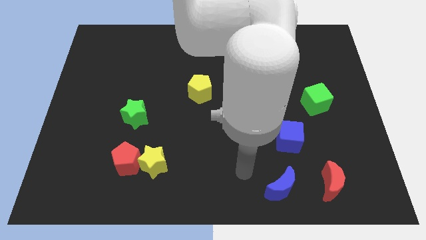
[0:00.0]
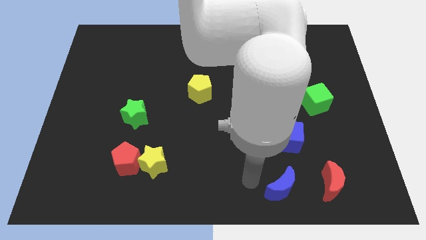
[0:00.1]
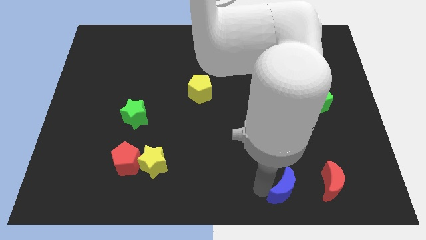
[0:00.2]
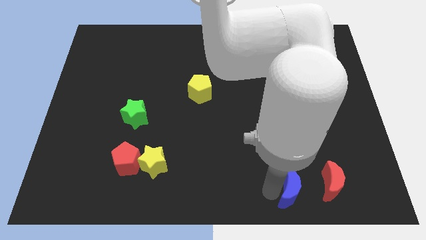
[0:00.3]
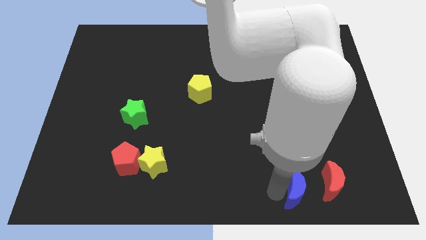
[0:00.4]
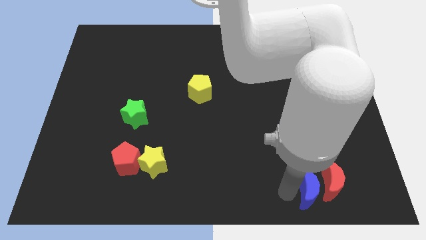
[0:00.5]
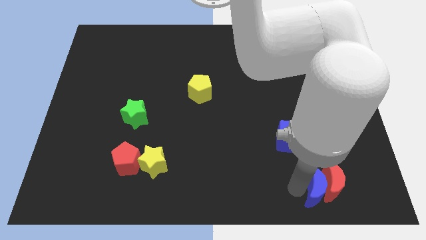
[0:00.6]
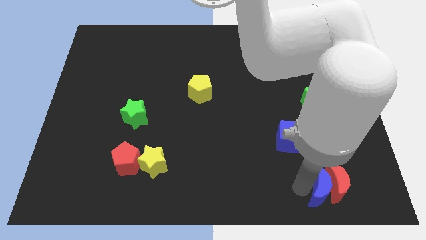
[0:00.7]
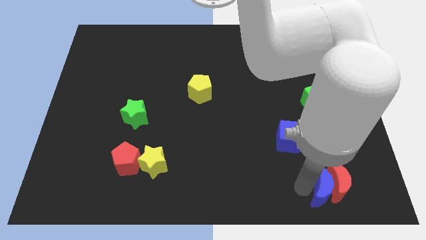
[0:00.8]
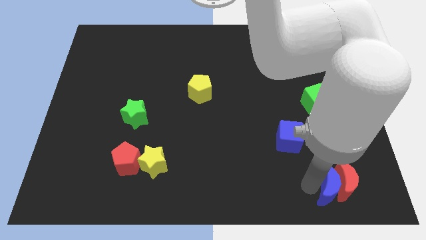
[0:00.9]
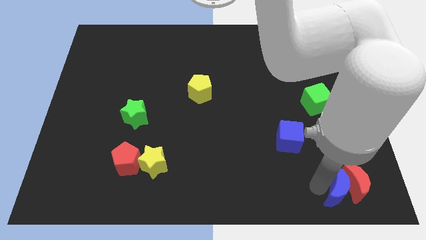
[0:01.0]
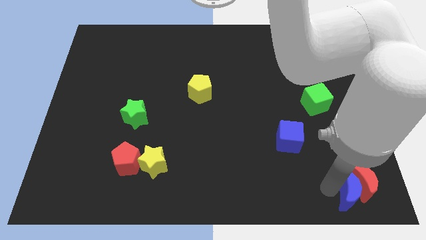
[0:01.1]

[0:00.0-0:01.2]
push the blue moon into the red moon

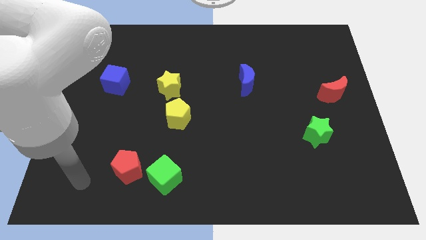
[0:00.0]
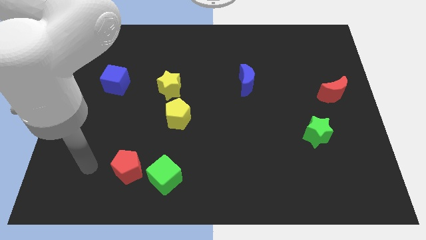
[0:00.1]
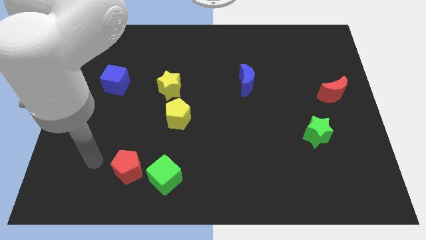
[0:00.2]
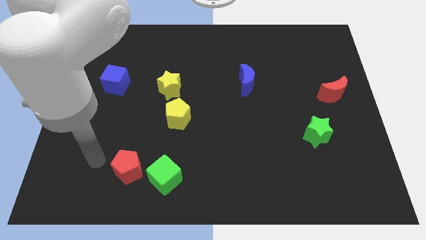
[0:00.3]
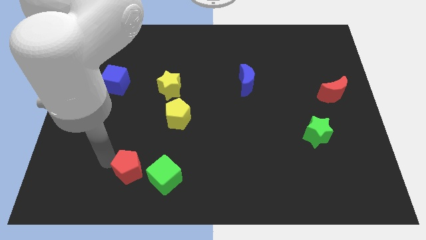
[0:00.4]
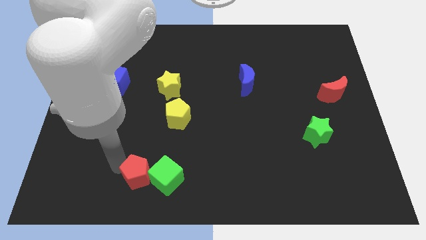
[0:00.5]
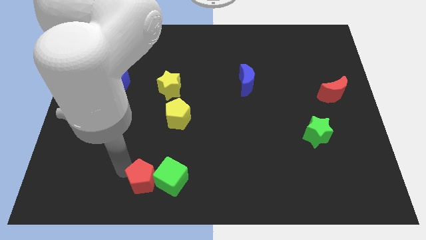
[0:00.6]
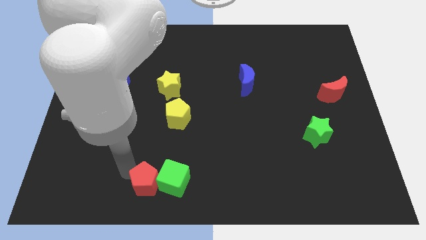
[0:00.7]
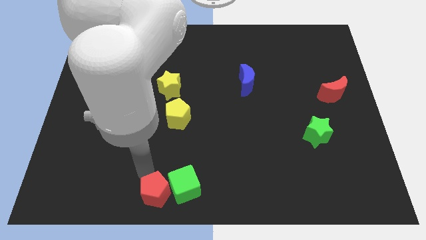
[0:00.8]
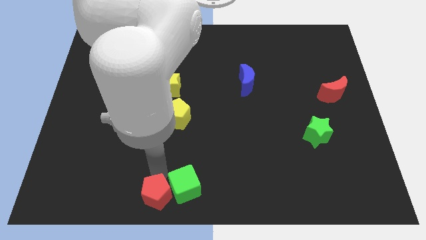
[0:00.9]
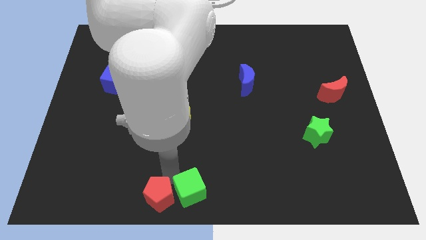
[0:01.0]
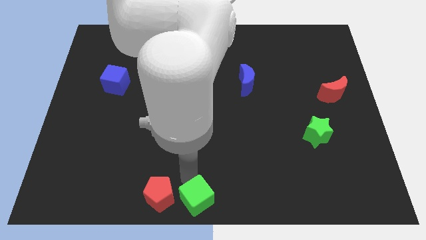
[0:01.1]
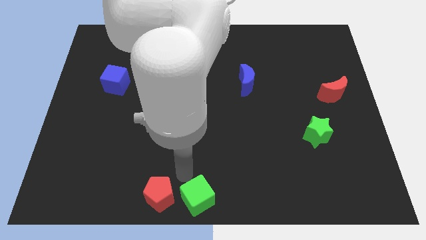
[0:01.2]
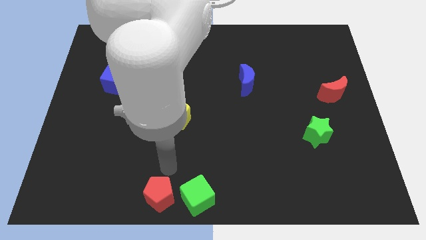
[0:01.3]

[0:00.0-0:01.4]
push the red pentagon into the green cube

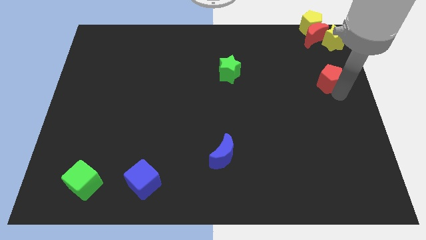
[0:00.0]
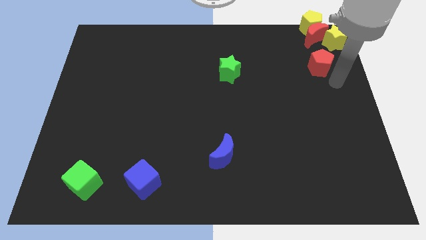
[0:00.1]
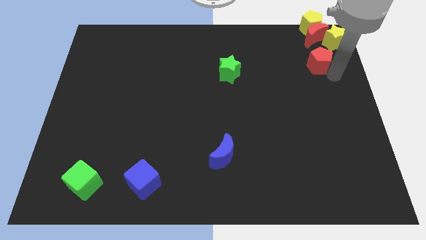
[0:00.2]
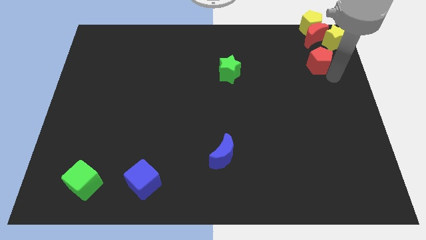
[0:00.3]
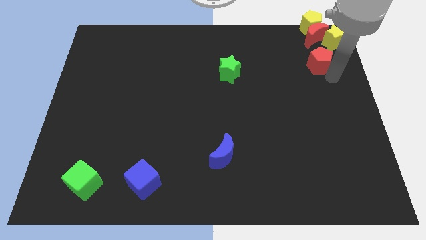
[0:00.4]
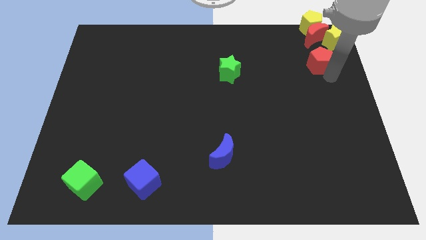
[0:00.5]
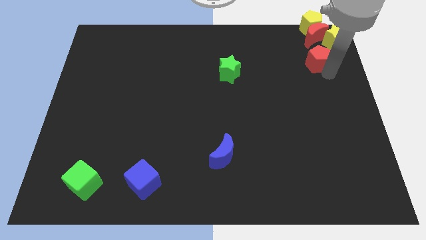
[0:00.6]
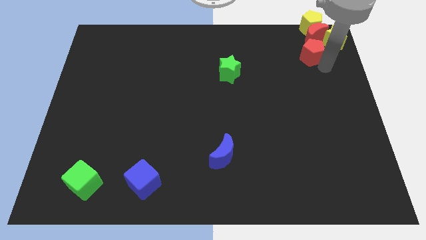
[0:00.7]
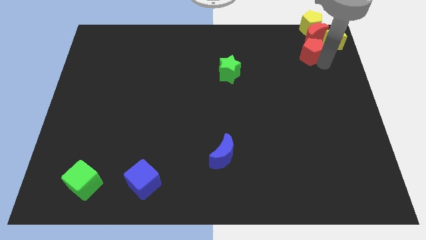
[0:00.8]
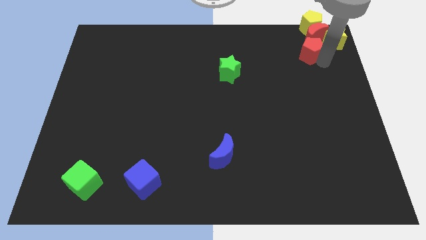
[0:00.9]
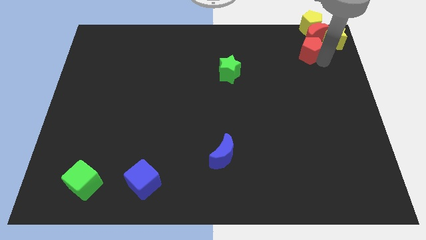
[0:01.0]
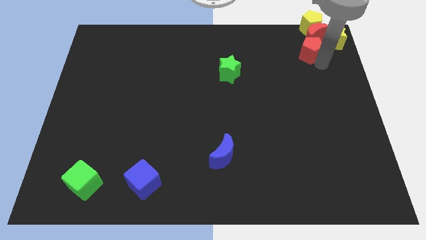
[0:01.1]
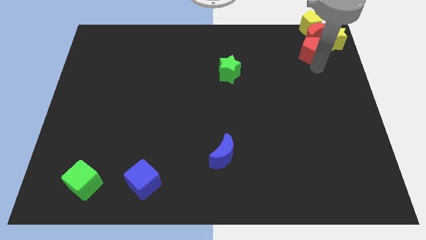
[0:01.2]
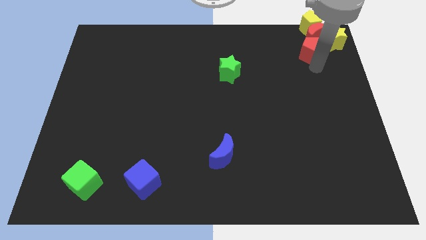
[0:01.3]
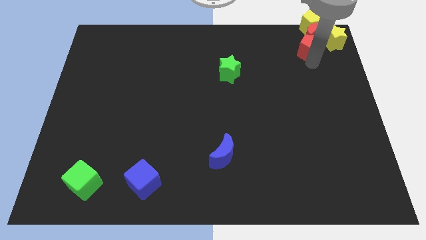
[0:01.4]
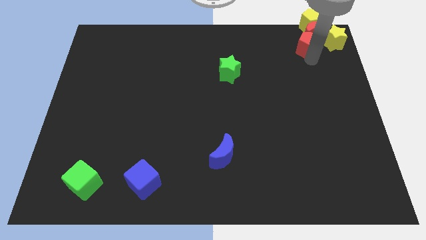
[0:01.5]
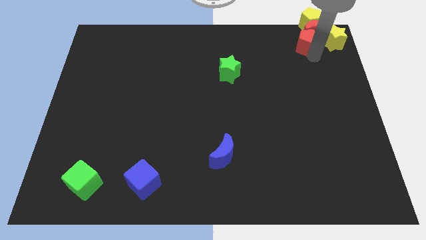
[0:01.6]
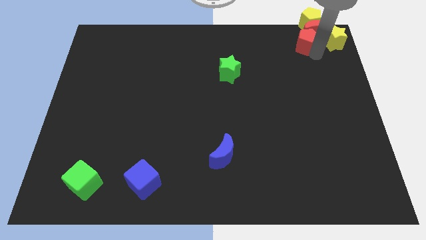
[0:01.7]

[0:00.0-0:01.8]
move the red pentagon in to red moon

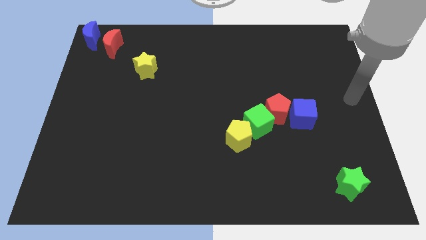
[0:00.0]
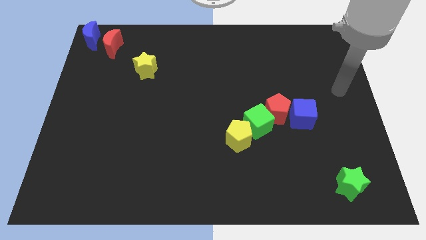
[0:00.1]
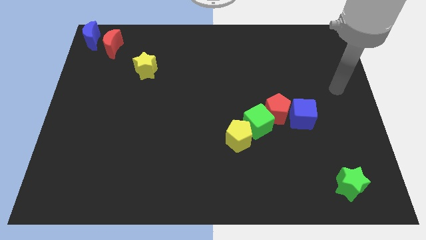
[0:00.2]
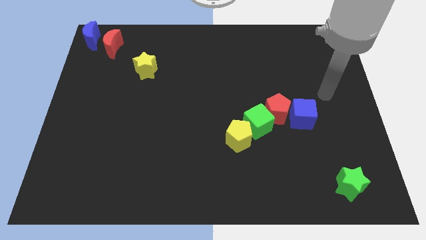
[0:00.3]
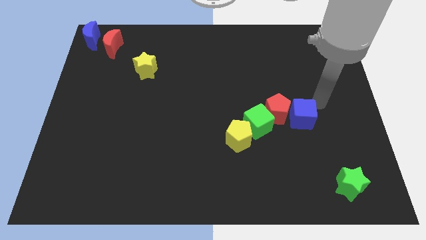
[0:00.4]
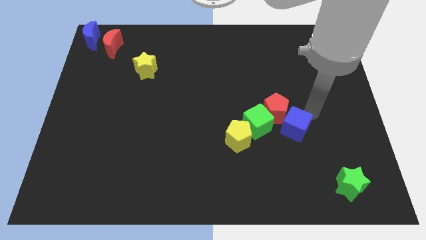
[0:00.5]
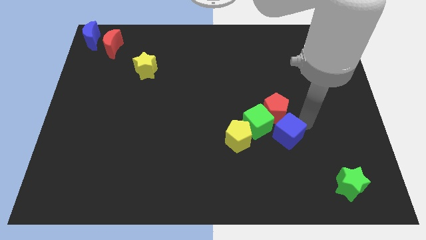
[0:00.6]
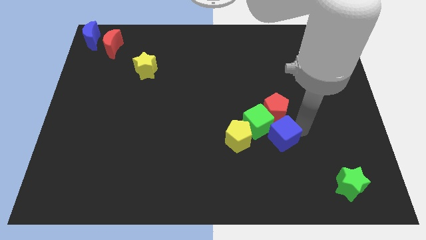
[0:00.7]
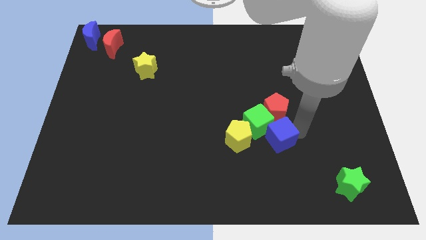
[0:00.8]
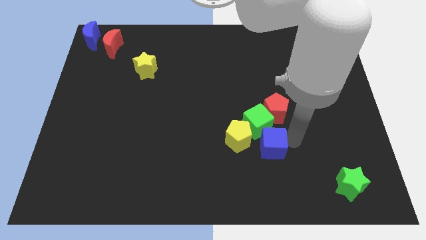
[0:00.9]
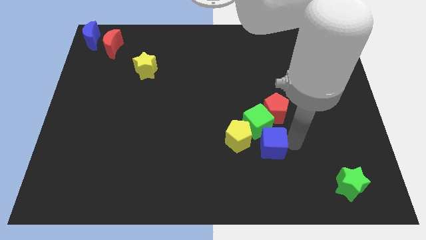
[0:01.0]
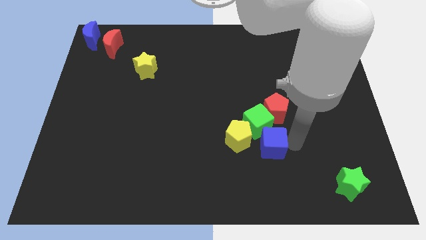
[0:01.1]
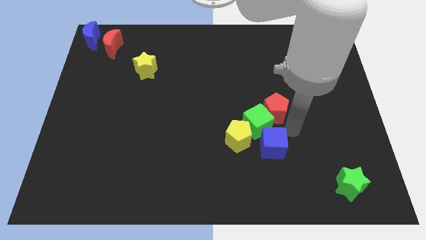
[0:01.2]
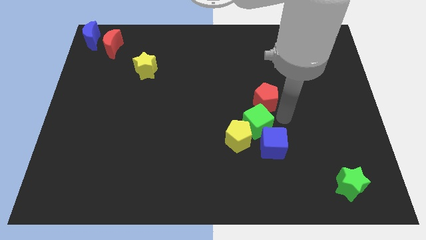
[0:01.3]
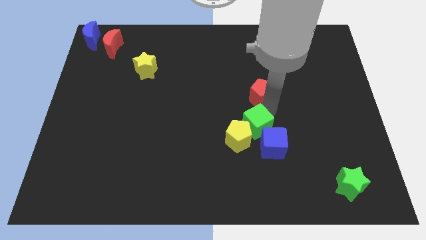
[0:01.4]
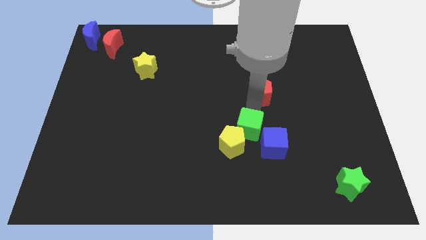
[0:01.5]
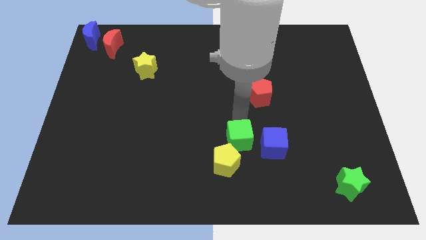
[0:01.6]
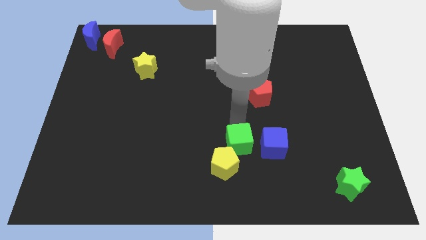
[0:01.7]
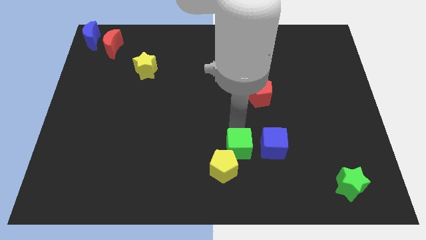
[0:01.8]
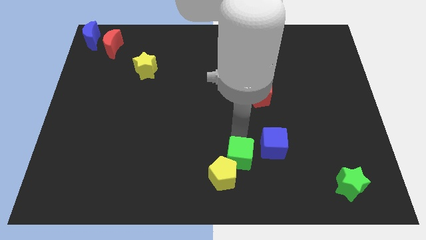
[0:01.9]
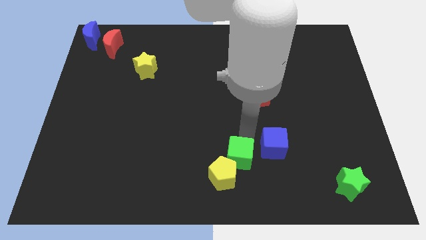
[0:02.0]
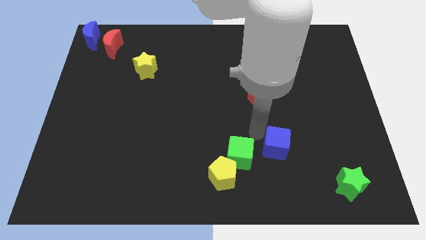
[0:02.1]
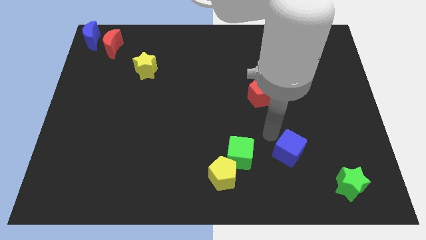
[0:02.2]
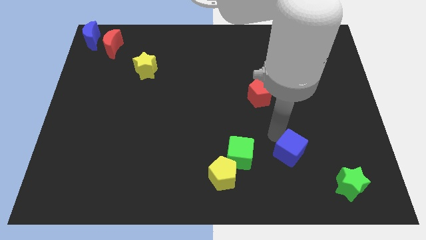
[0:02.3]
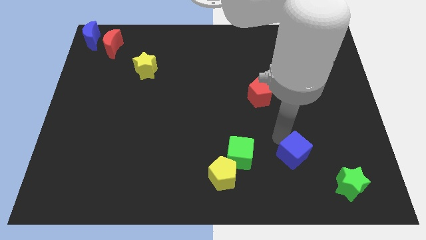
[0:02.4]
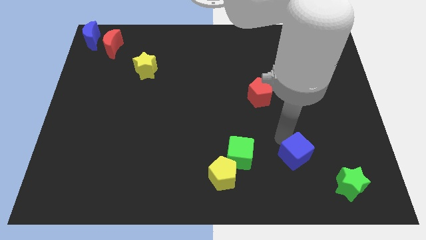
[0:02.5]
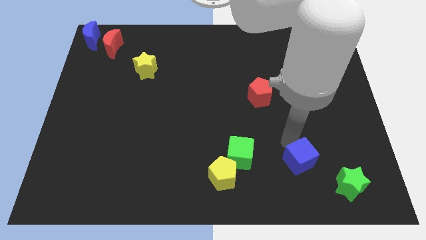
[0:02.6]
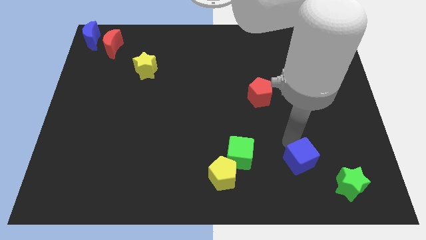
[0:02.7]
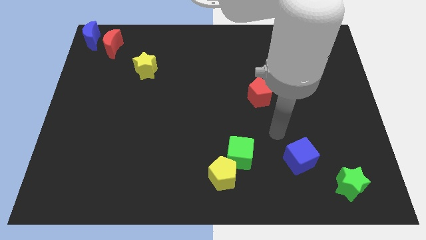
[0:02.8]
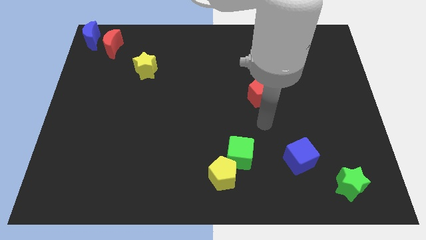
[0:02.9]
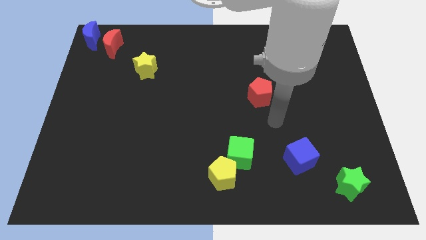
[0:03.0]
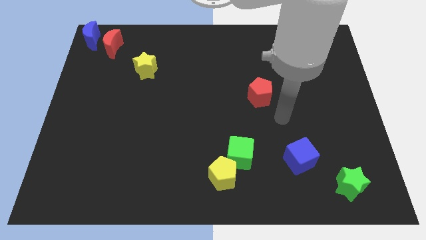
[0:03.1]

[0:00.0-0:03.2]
place the blue cube in between the green cube and green star

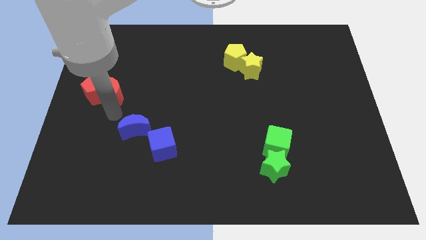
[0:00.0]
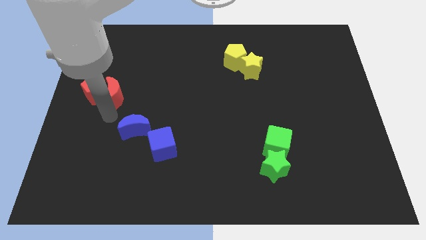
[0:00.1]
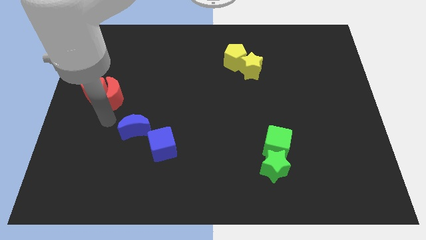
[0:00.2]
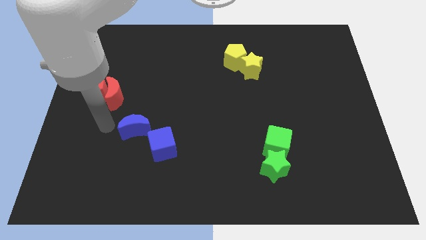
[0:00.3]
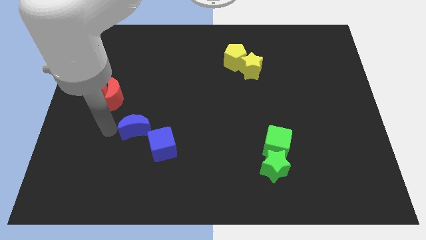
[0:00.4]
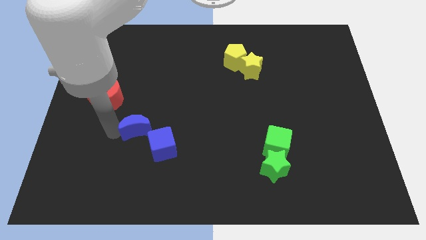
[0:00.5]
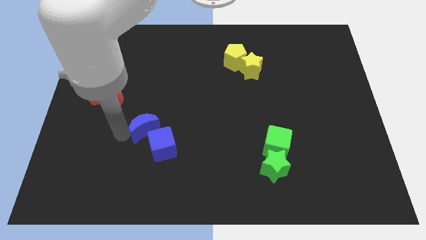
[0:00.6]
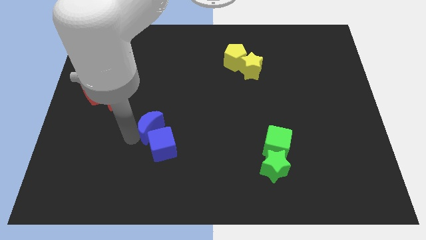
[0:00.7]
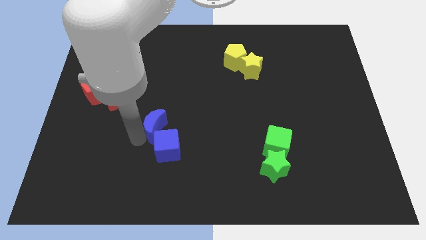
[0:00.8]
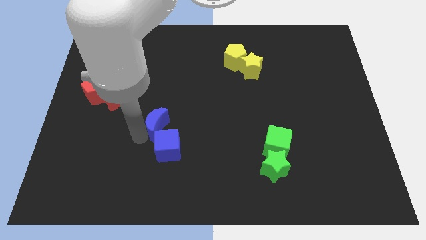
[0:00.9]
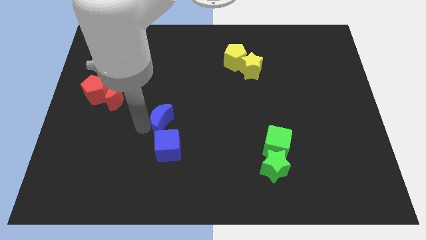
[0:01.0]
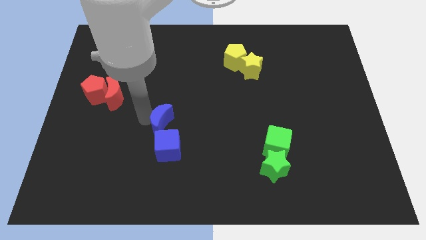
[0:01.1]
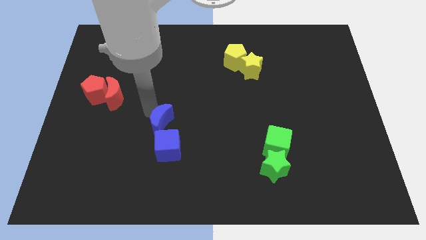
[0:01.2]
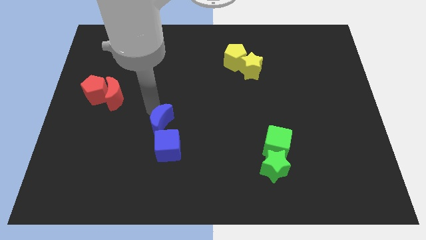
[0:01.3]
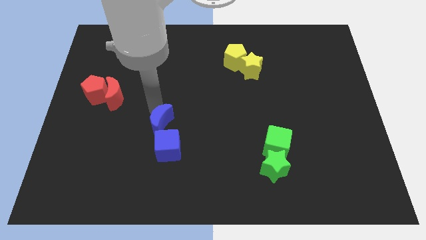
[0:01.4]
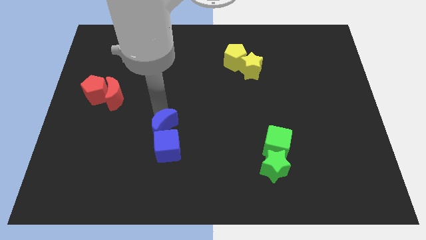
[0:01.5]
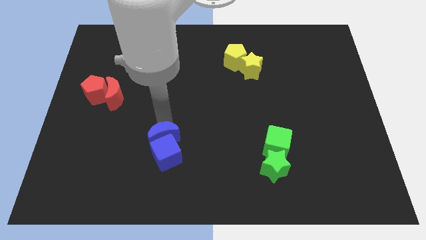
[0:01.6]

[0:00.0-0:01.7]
push the blue crescent to the top of the blue cube
